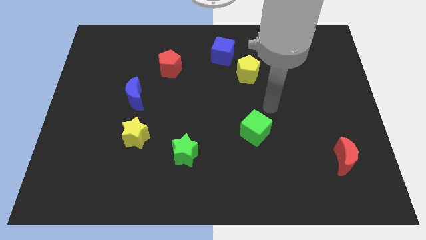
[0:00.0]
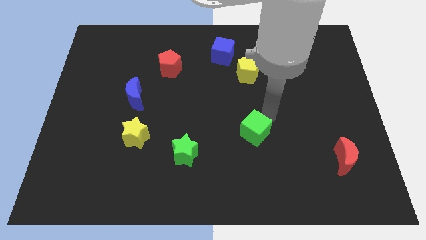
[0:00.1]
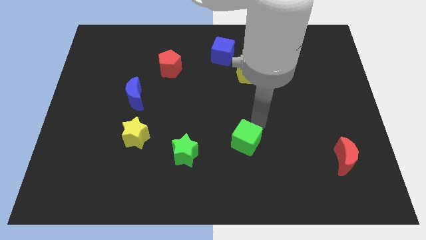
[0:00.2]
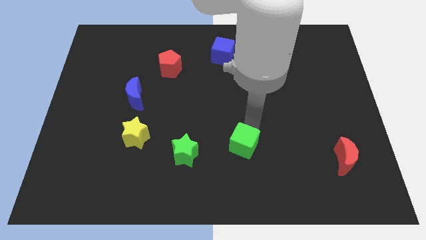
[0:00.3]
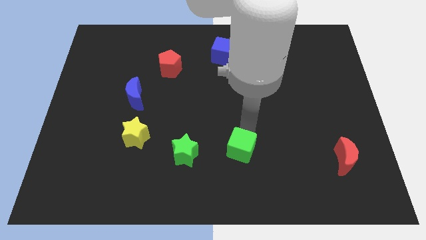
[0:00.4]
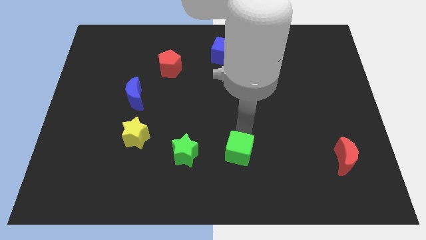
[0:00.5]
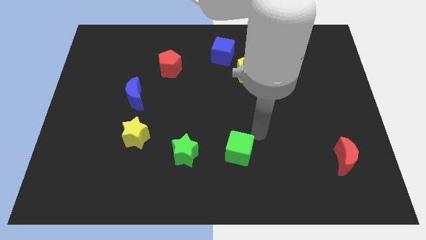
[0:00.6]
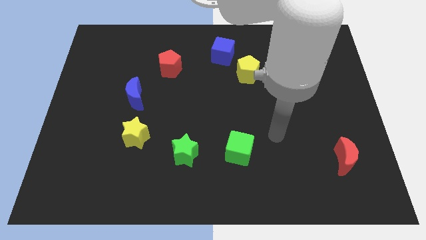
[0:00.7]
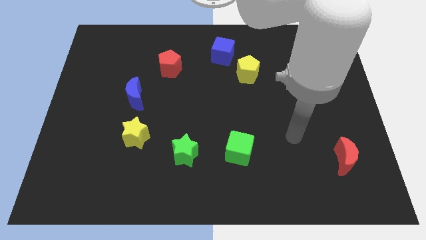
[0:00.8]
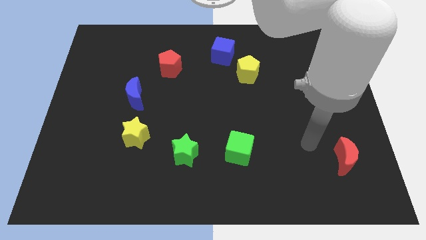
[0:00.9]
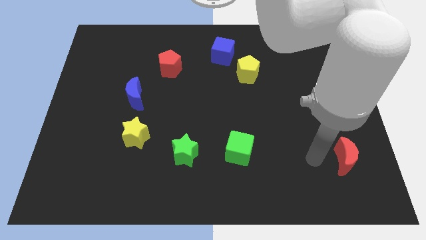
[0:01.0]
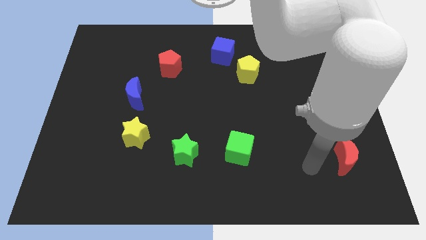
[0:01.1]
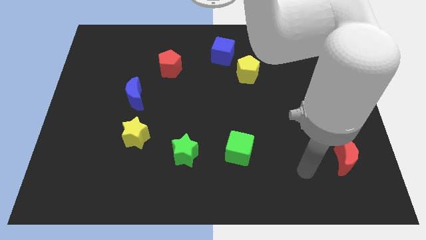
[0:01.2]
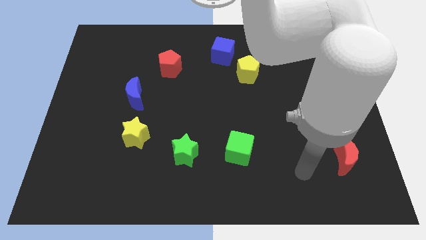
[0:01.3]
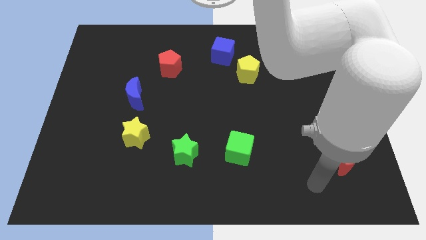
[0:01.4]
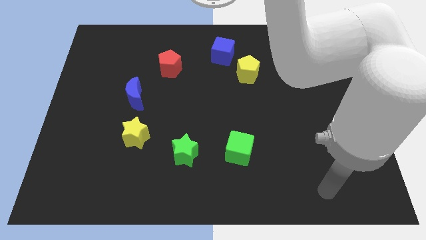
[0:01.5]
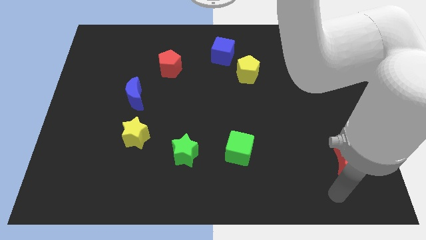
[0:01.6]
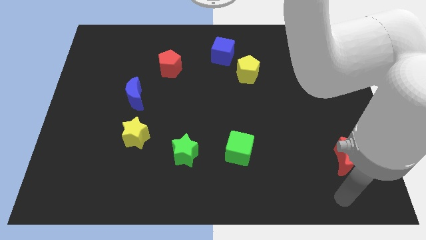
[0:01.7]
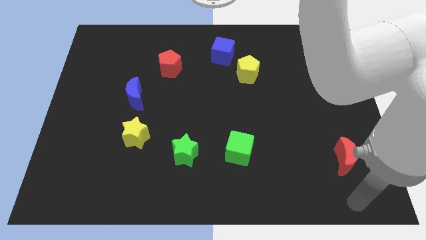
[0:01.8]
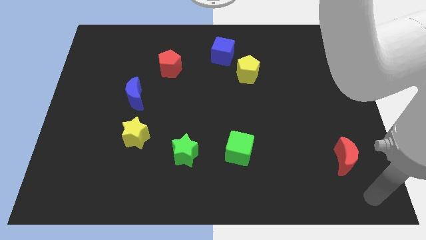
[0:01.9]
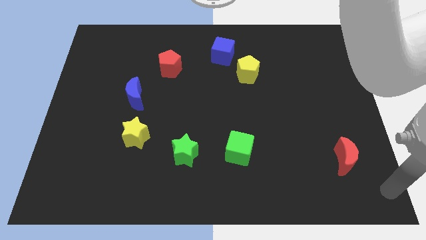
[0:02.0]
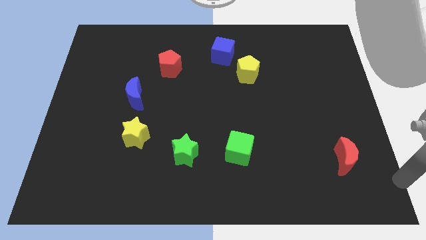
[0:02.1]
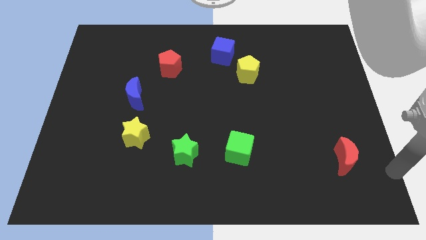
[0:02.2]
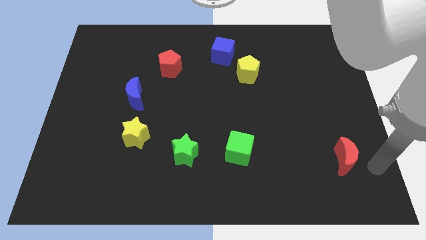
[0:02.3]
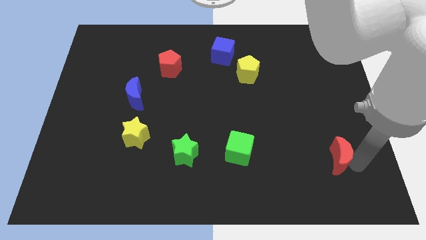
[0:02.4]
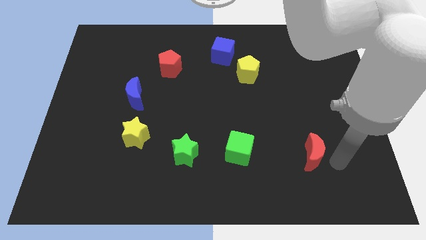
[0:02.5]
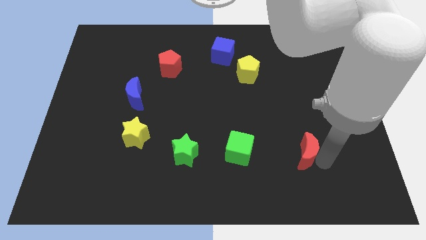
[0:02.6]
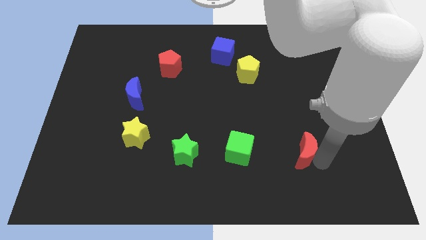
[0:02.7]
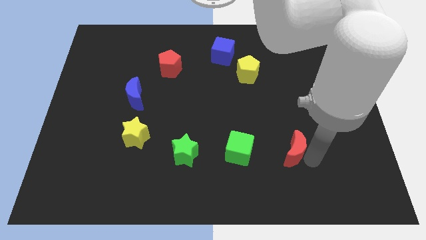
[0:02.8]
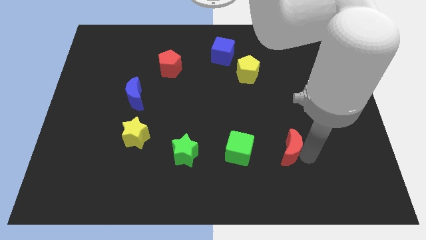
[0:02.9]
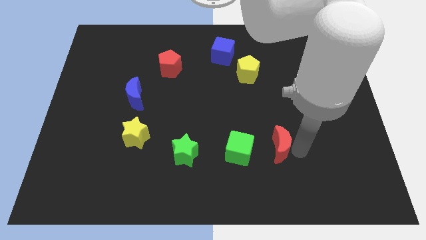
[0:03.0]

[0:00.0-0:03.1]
push the red crescent close to green cube

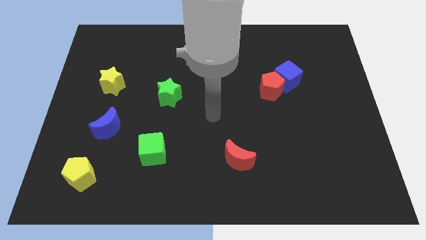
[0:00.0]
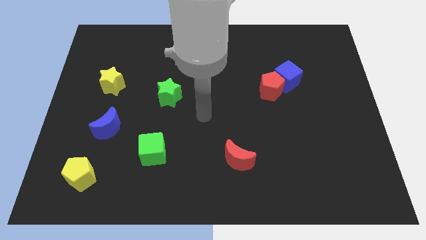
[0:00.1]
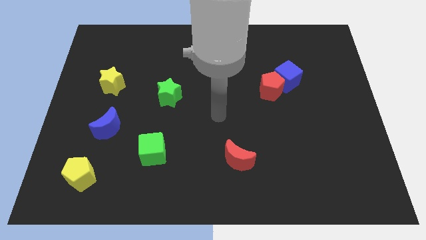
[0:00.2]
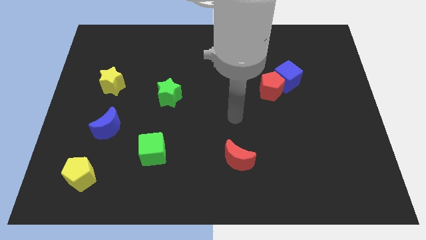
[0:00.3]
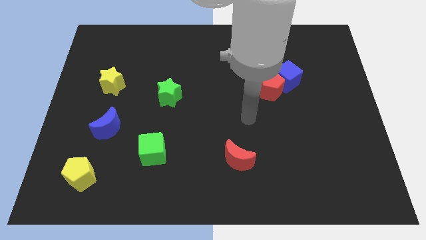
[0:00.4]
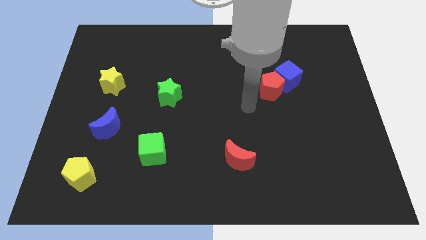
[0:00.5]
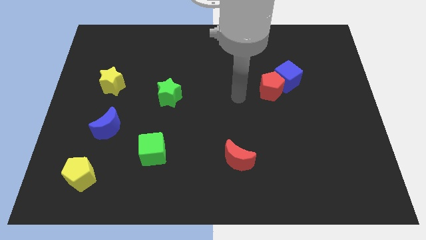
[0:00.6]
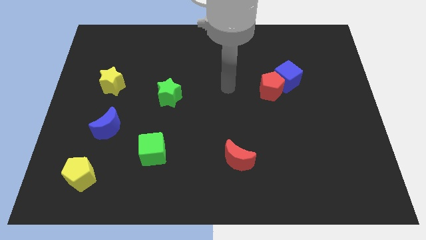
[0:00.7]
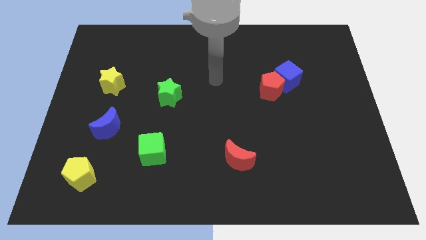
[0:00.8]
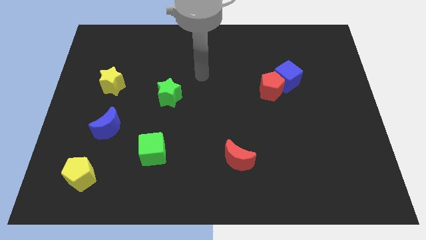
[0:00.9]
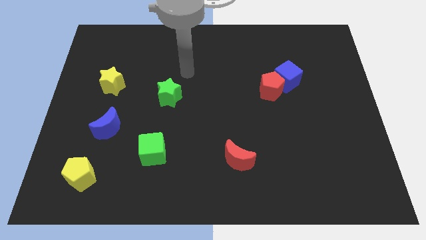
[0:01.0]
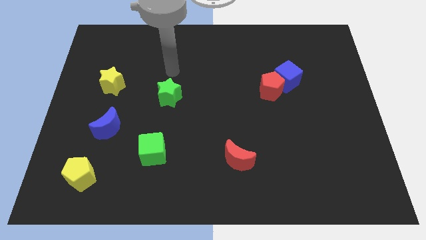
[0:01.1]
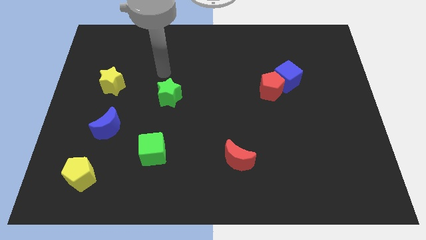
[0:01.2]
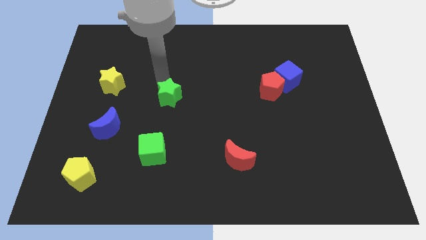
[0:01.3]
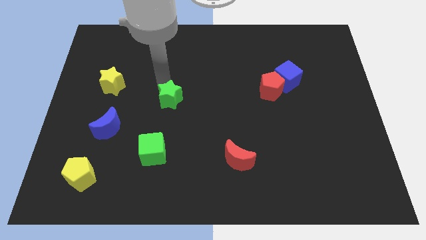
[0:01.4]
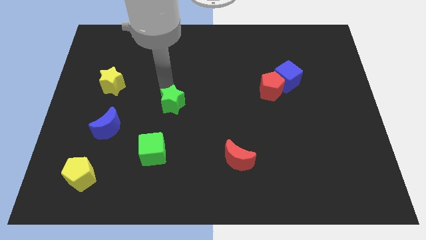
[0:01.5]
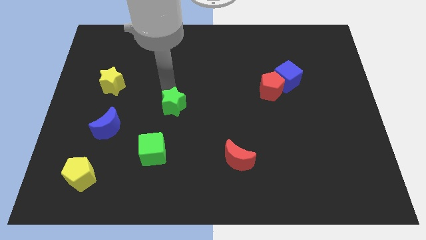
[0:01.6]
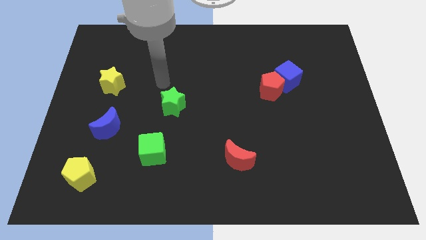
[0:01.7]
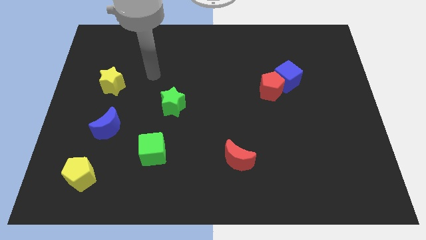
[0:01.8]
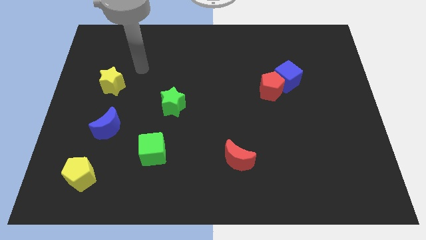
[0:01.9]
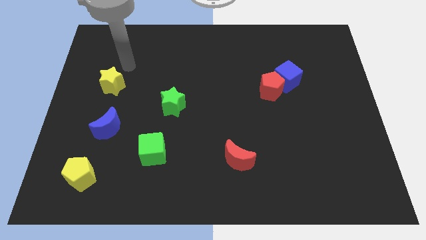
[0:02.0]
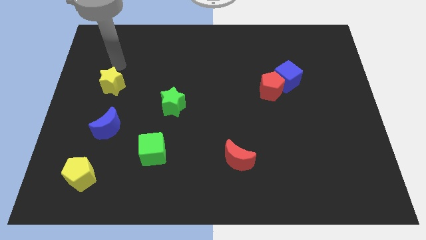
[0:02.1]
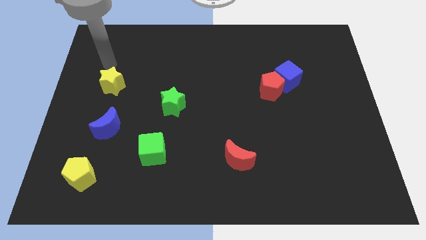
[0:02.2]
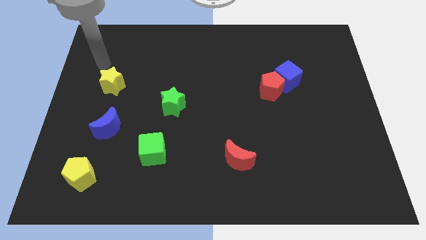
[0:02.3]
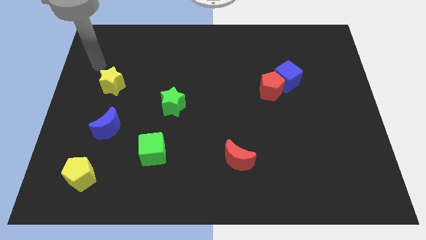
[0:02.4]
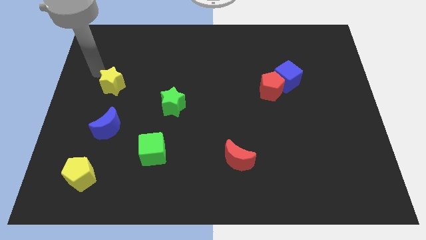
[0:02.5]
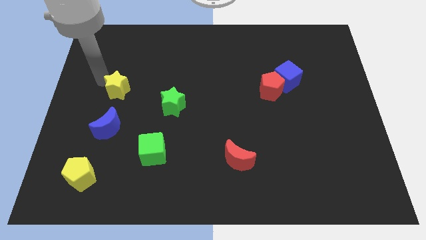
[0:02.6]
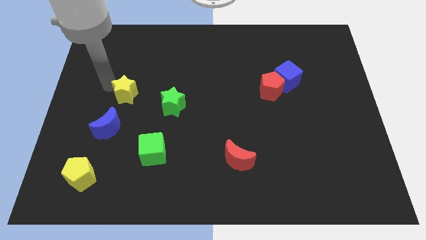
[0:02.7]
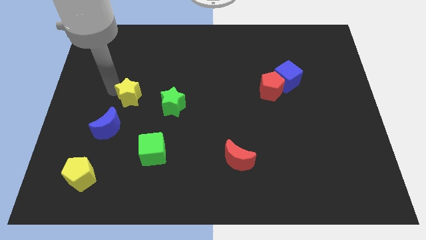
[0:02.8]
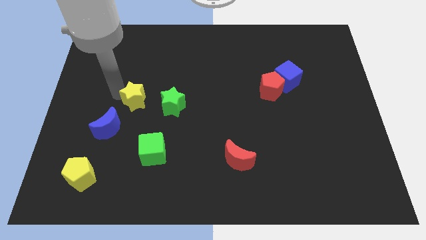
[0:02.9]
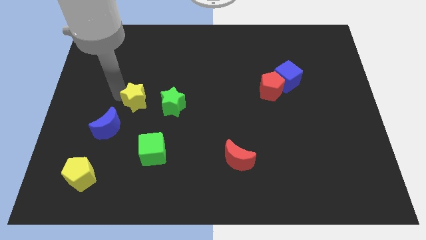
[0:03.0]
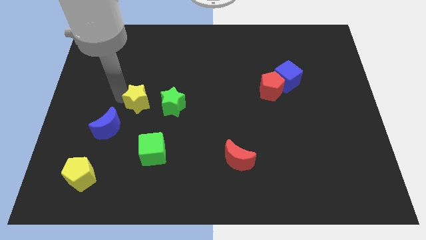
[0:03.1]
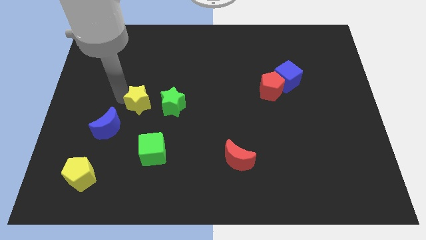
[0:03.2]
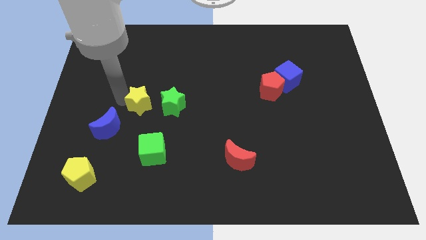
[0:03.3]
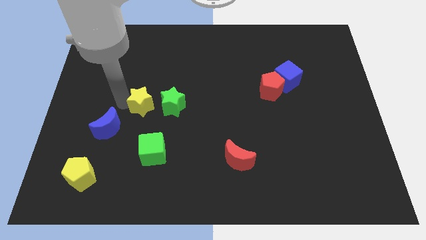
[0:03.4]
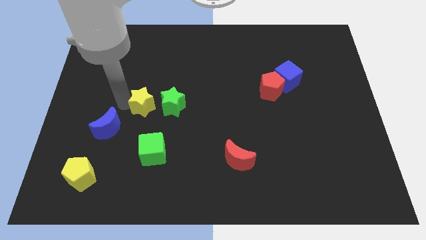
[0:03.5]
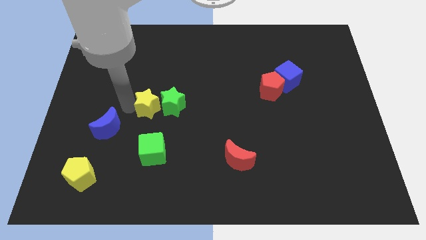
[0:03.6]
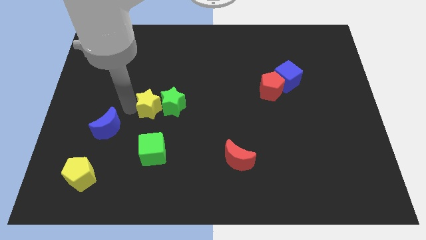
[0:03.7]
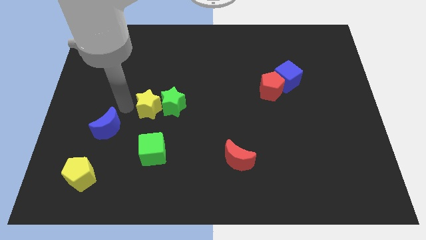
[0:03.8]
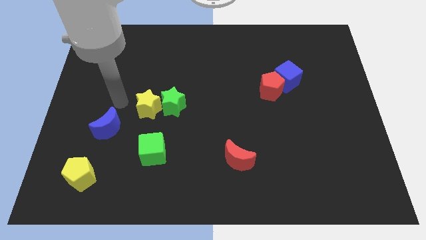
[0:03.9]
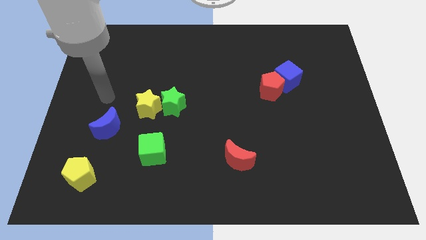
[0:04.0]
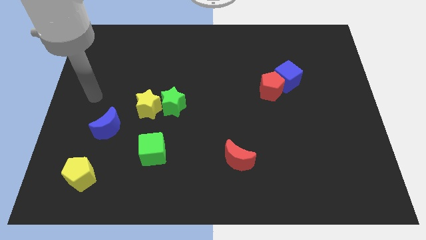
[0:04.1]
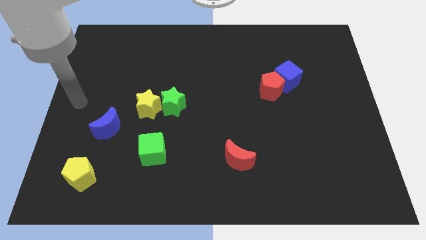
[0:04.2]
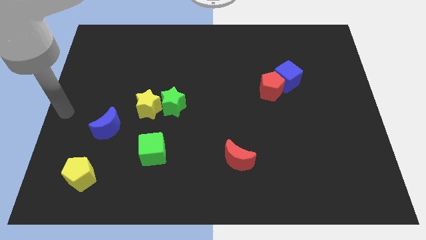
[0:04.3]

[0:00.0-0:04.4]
place the yellow star above the green cube

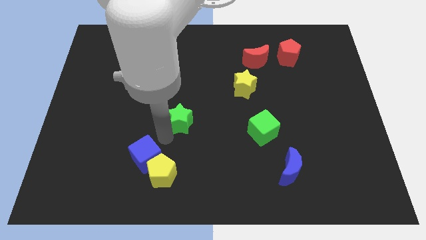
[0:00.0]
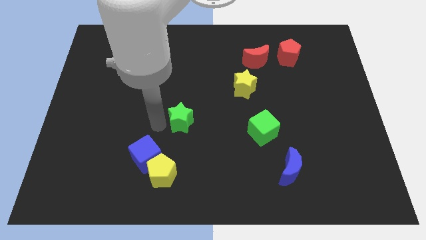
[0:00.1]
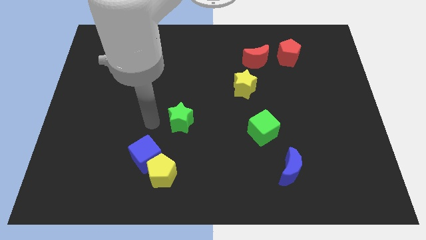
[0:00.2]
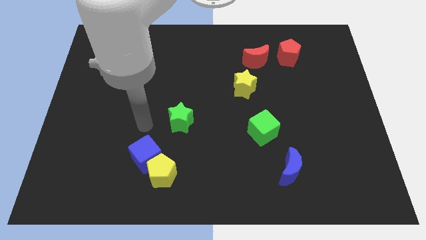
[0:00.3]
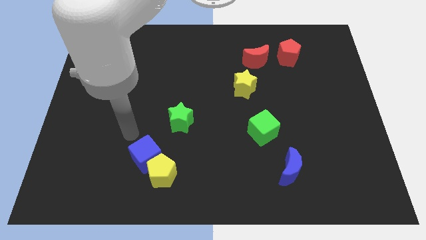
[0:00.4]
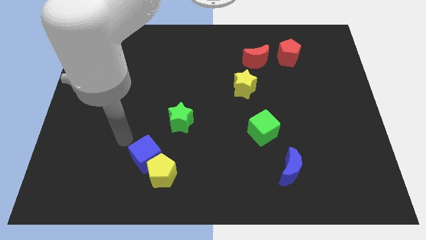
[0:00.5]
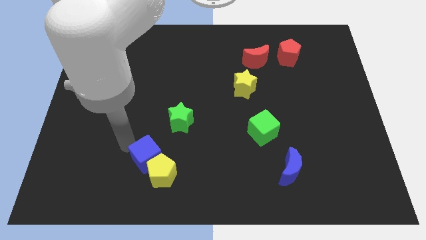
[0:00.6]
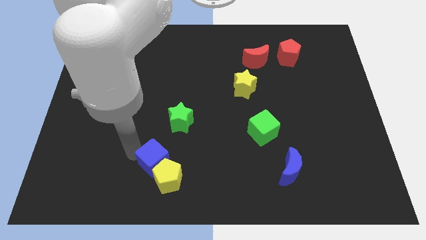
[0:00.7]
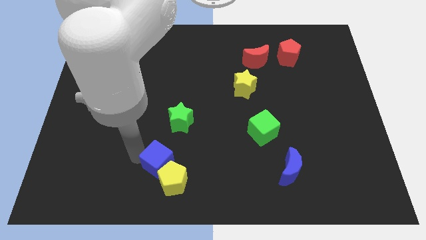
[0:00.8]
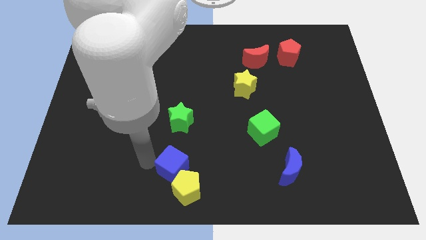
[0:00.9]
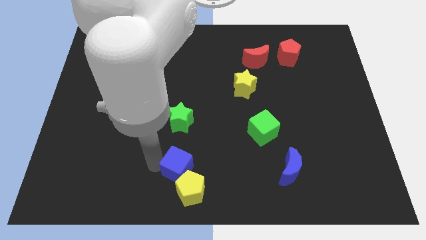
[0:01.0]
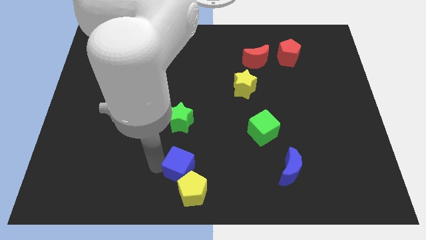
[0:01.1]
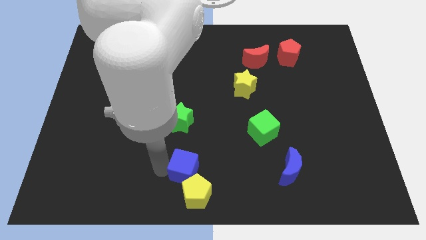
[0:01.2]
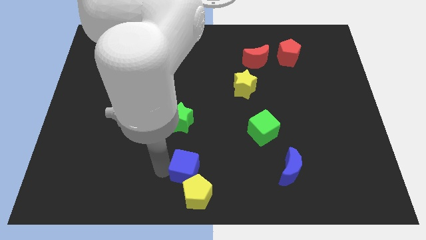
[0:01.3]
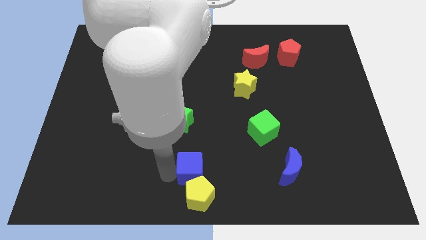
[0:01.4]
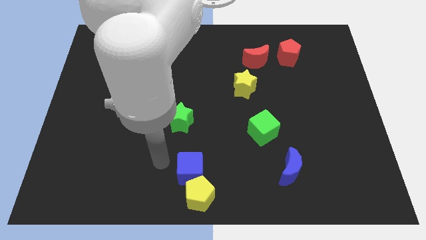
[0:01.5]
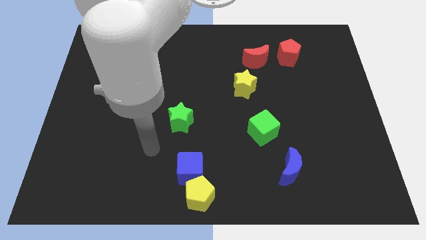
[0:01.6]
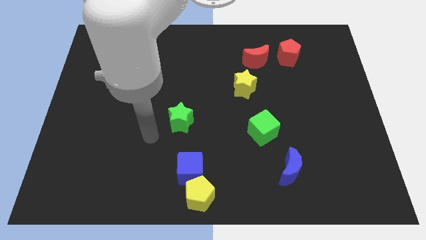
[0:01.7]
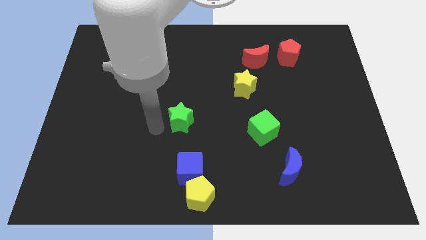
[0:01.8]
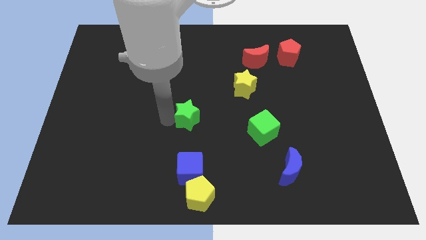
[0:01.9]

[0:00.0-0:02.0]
move blue cube to the top of yellow pentagon
